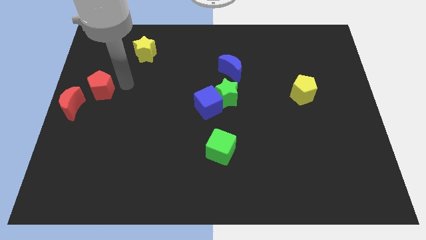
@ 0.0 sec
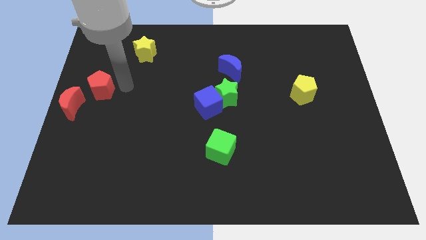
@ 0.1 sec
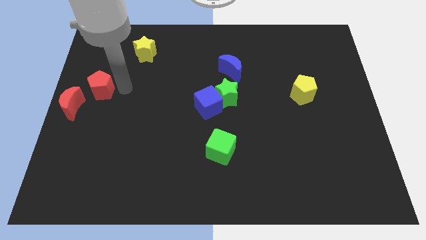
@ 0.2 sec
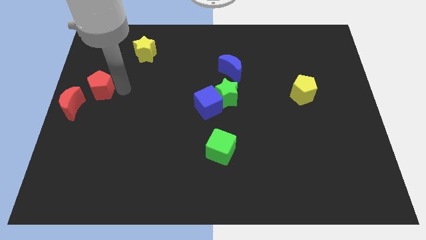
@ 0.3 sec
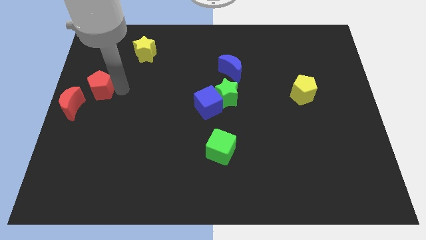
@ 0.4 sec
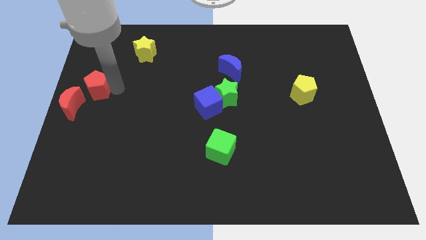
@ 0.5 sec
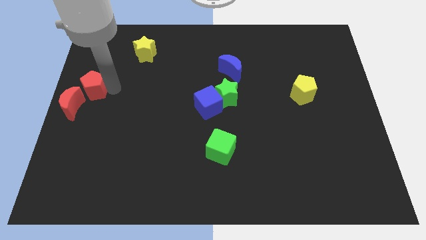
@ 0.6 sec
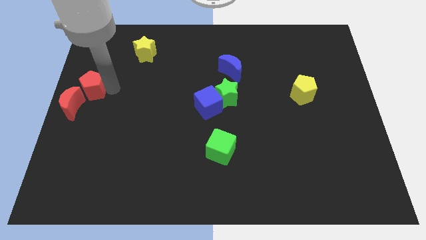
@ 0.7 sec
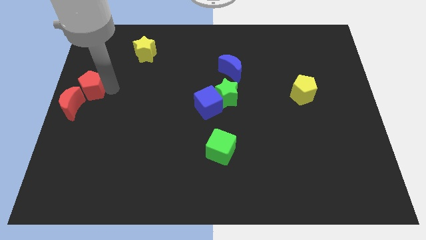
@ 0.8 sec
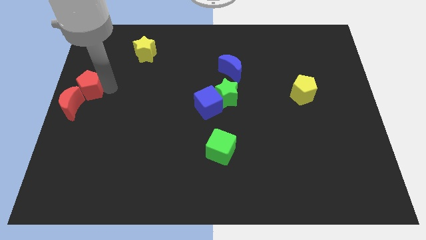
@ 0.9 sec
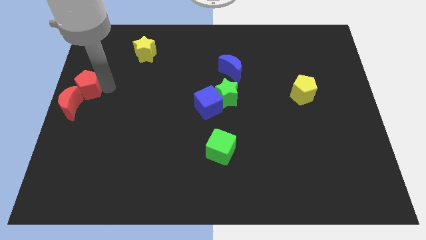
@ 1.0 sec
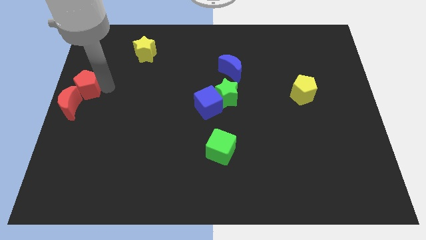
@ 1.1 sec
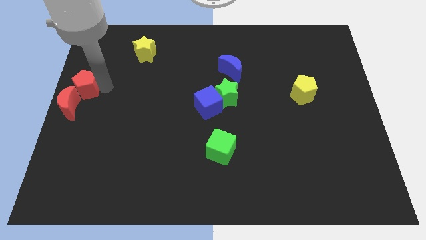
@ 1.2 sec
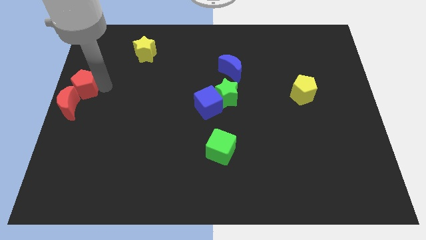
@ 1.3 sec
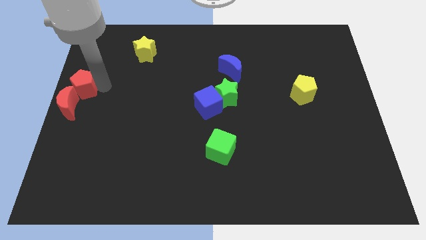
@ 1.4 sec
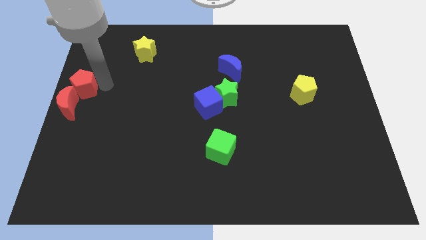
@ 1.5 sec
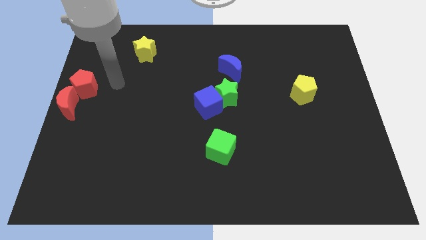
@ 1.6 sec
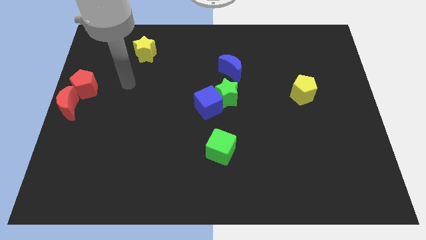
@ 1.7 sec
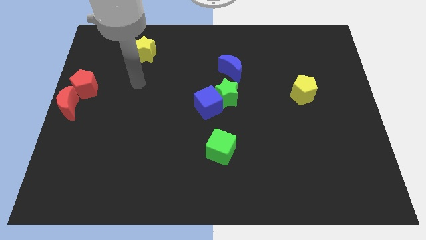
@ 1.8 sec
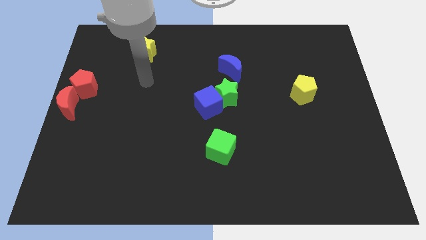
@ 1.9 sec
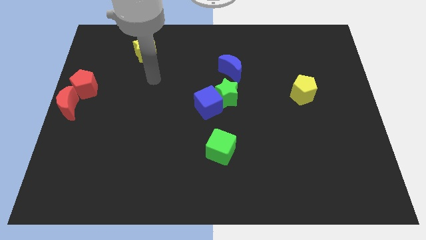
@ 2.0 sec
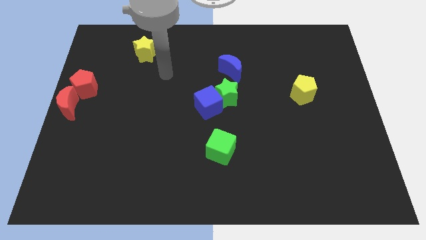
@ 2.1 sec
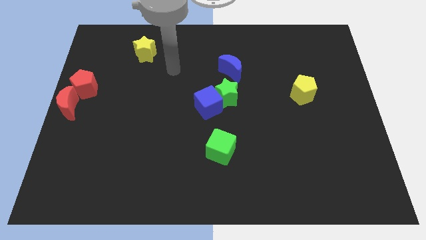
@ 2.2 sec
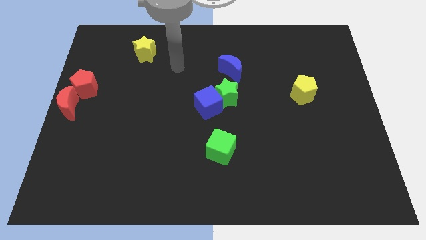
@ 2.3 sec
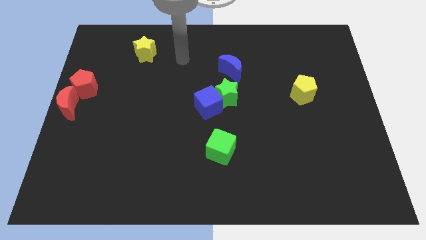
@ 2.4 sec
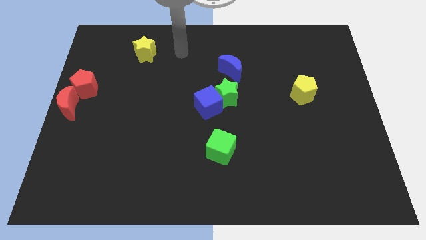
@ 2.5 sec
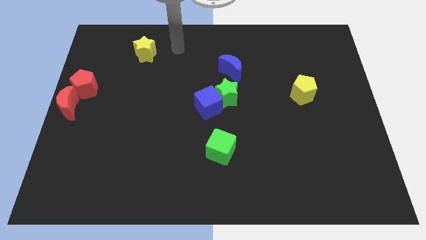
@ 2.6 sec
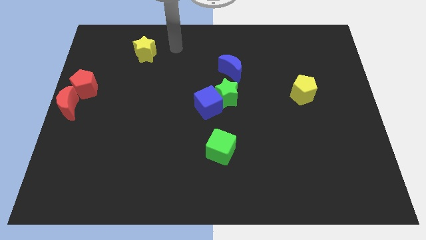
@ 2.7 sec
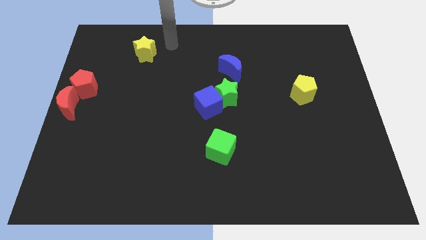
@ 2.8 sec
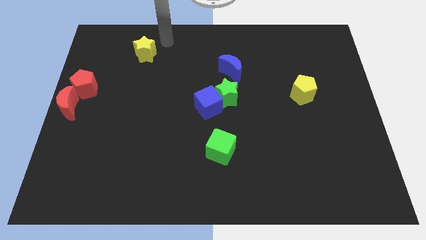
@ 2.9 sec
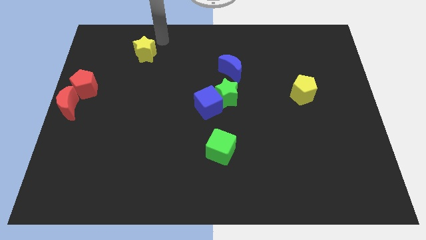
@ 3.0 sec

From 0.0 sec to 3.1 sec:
slide the red pentagon into the red crescent

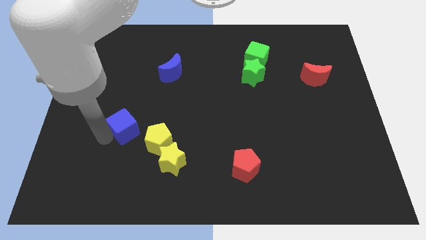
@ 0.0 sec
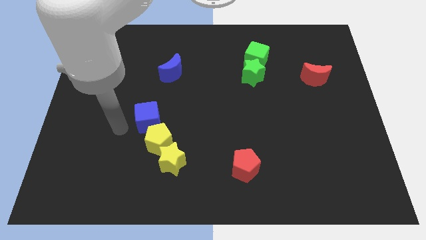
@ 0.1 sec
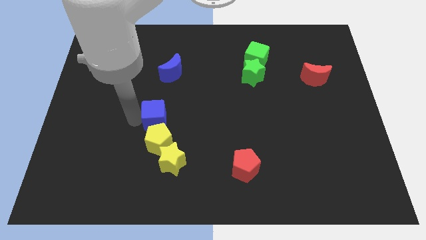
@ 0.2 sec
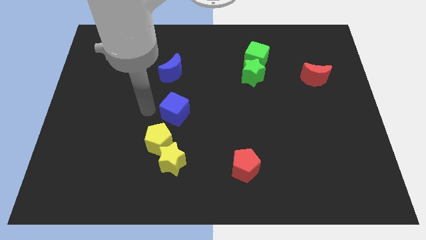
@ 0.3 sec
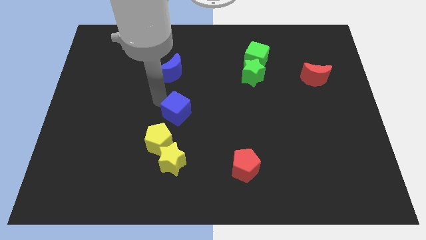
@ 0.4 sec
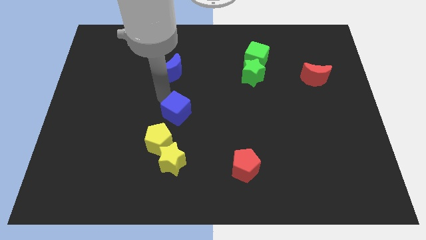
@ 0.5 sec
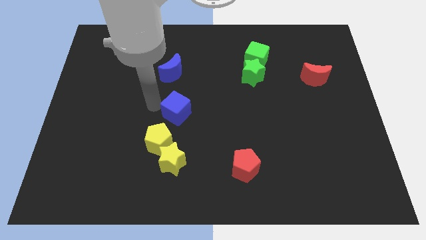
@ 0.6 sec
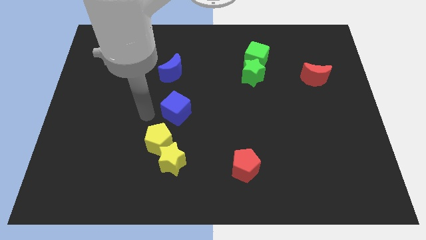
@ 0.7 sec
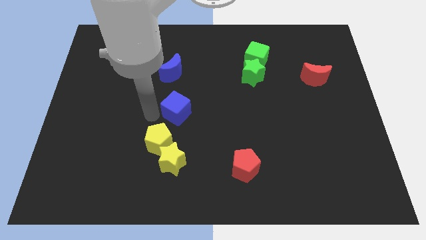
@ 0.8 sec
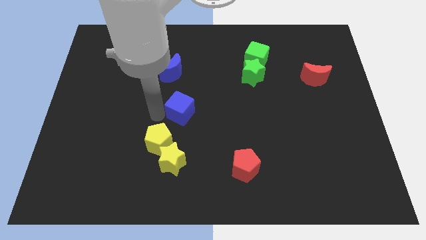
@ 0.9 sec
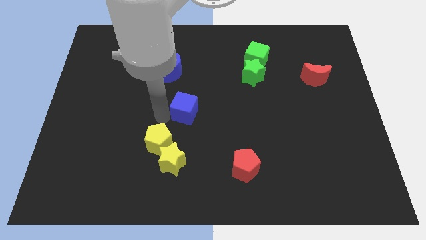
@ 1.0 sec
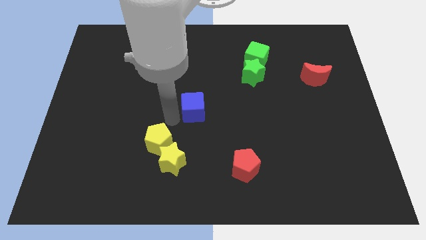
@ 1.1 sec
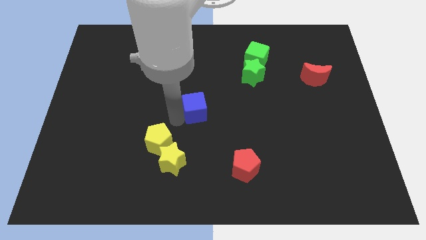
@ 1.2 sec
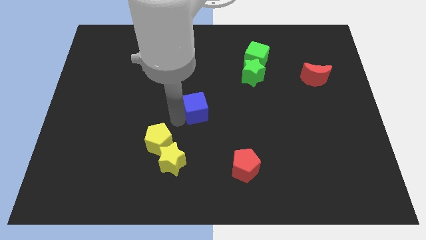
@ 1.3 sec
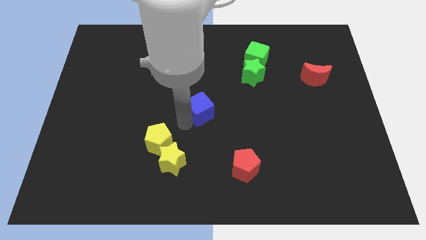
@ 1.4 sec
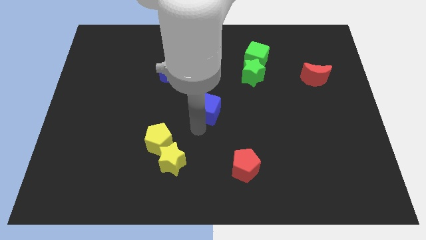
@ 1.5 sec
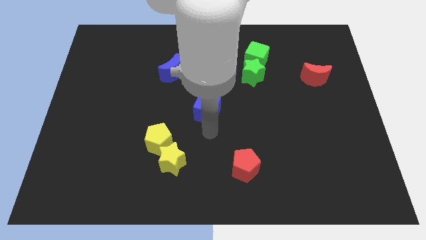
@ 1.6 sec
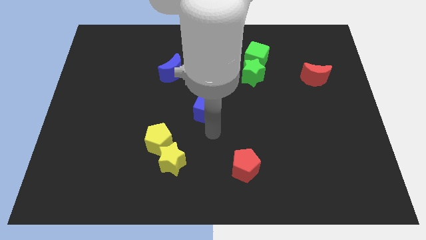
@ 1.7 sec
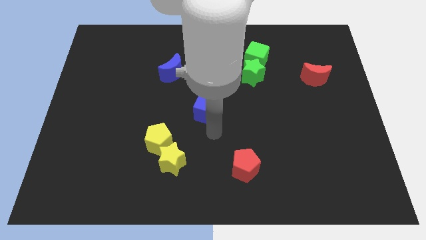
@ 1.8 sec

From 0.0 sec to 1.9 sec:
put the blue cube between the blue moon and red pentagon

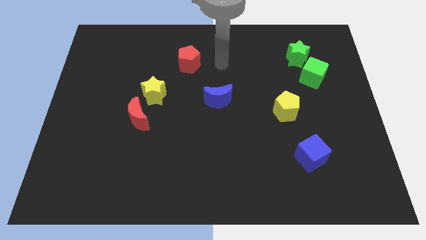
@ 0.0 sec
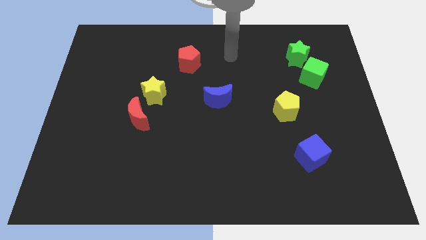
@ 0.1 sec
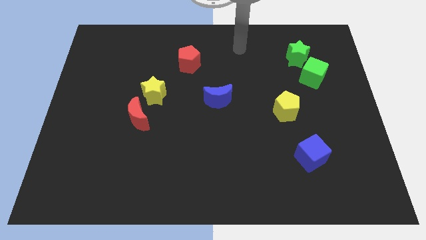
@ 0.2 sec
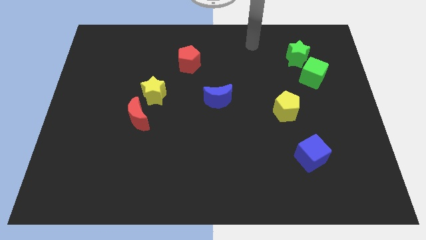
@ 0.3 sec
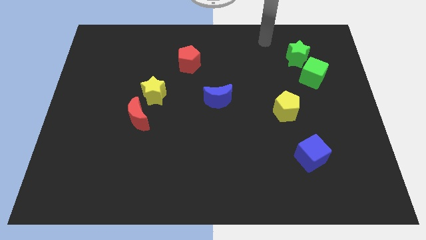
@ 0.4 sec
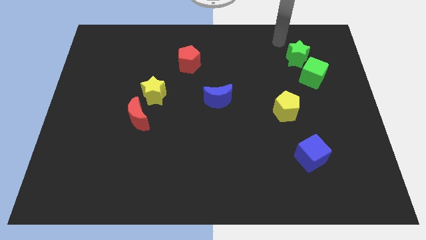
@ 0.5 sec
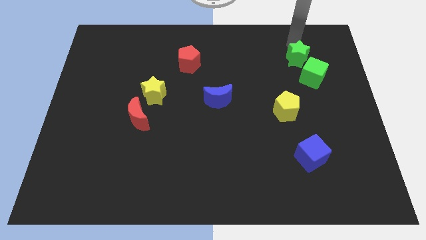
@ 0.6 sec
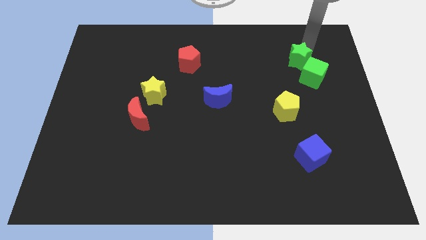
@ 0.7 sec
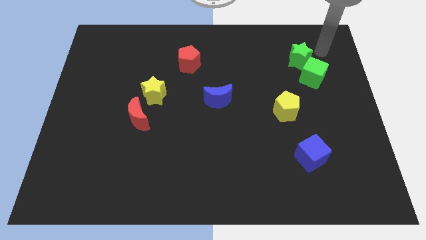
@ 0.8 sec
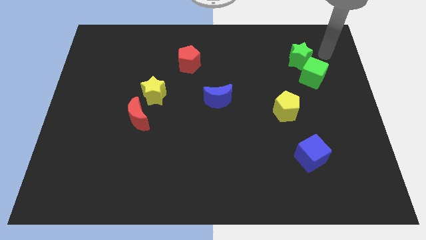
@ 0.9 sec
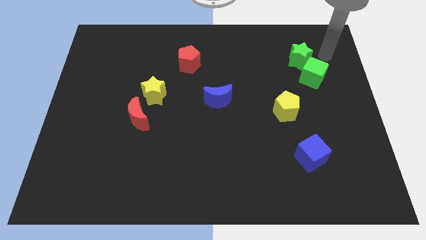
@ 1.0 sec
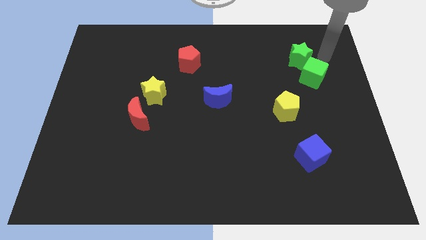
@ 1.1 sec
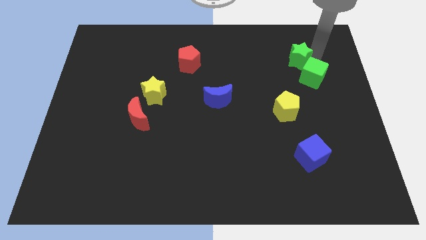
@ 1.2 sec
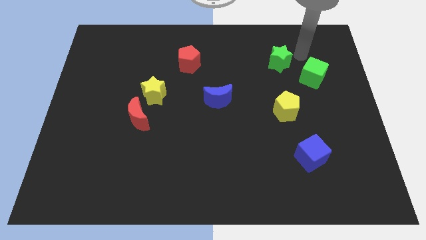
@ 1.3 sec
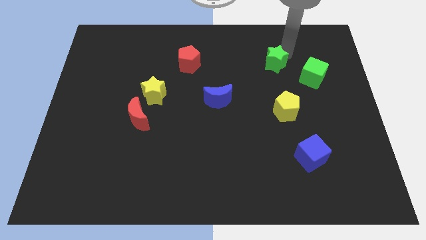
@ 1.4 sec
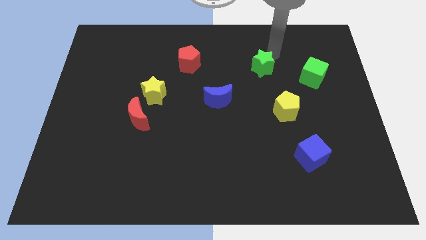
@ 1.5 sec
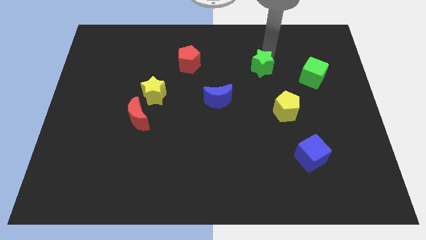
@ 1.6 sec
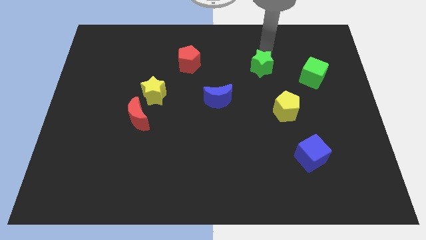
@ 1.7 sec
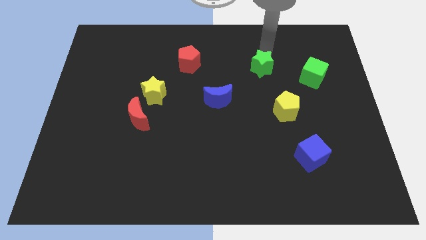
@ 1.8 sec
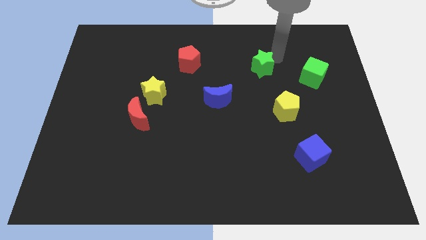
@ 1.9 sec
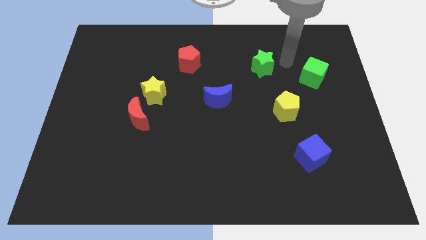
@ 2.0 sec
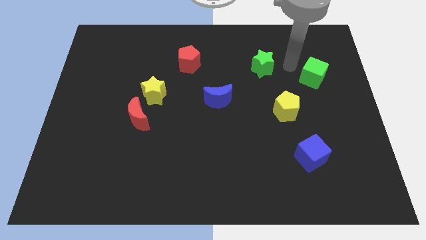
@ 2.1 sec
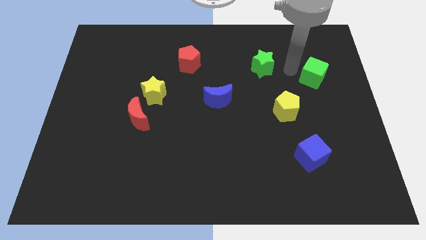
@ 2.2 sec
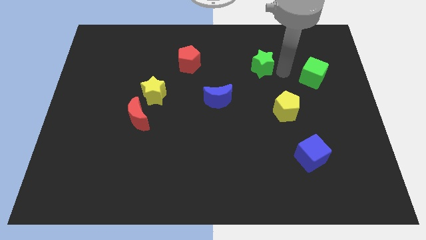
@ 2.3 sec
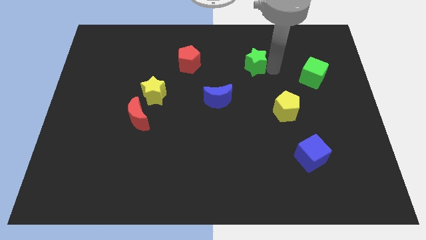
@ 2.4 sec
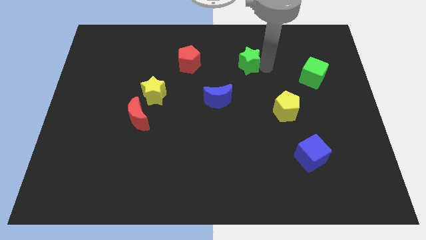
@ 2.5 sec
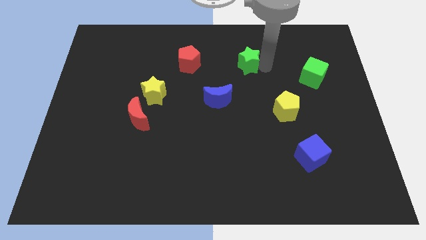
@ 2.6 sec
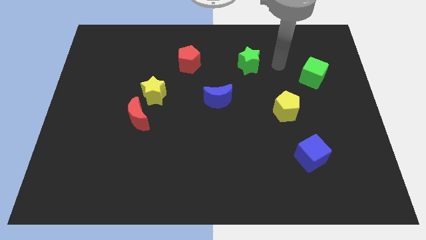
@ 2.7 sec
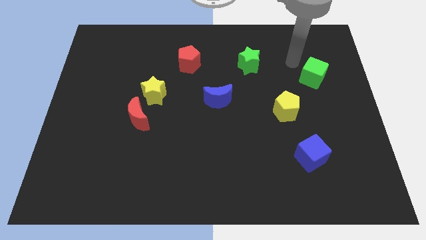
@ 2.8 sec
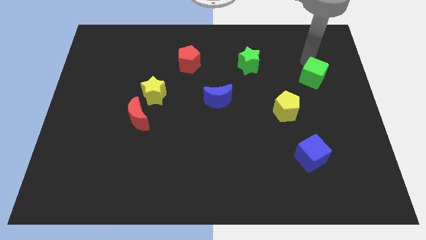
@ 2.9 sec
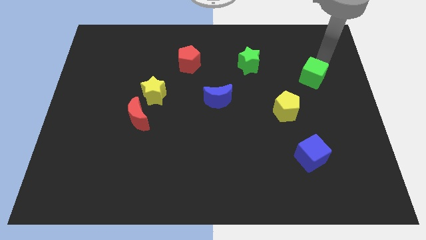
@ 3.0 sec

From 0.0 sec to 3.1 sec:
separate the green star from the green cube

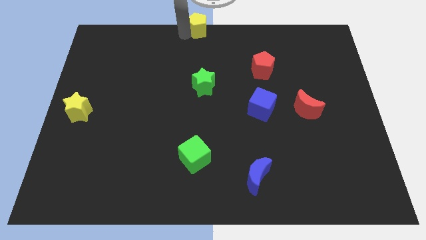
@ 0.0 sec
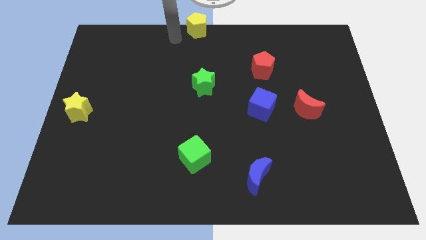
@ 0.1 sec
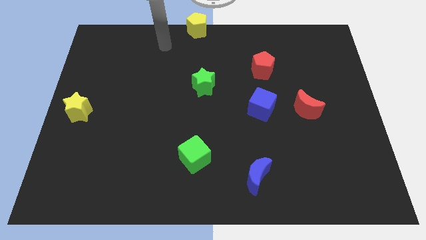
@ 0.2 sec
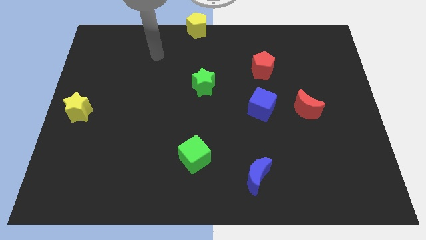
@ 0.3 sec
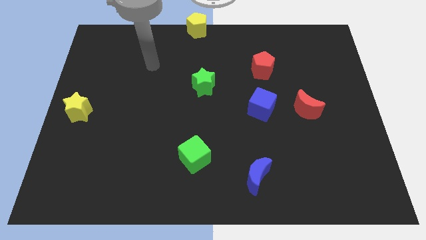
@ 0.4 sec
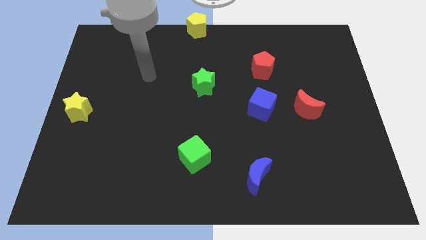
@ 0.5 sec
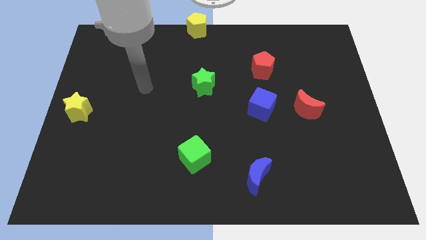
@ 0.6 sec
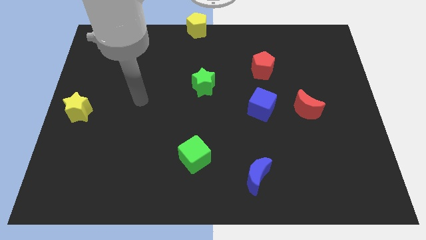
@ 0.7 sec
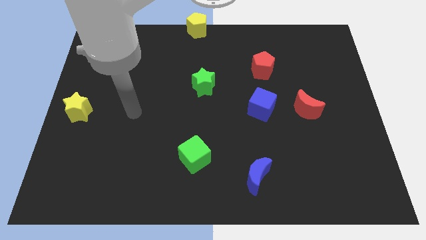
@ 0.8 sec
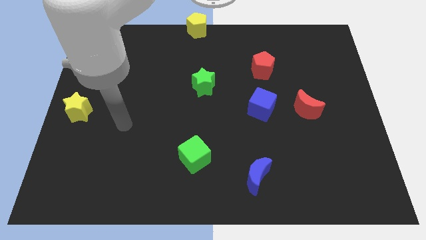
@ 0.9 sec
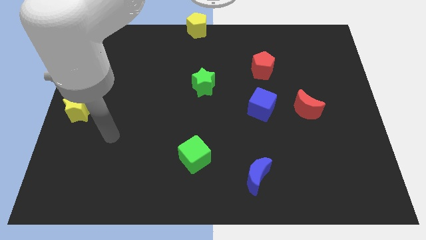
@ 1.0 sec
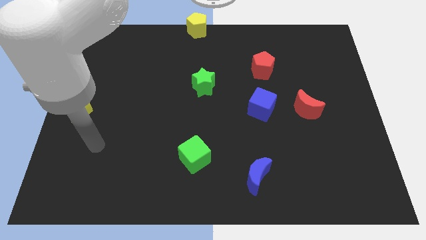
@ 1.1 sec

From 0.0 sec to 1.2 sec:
move the arm away from the yellow pentagon
